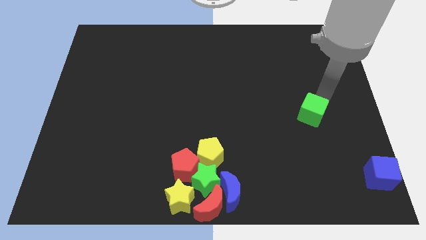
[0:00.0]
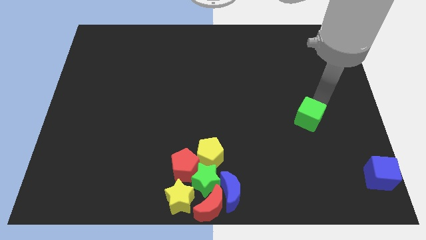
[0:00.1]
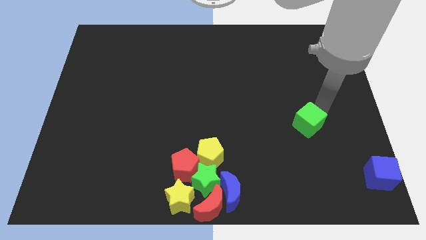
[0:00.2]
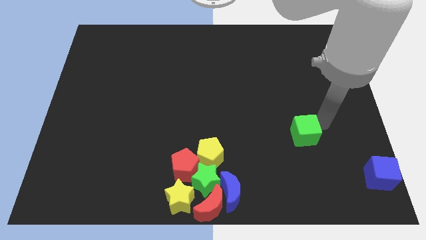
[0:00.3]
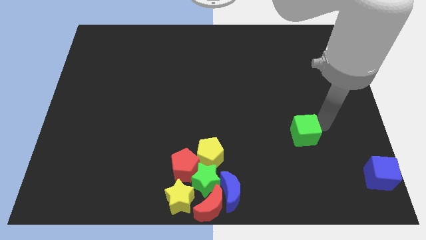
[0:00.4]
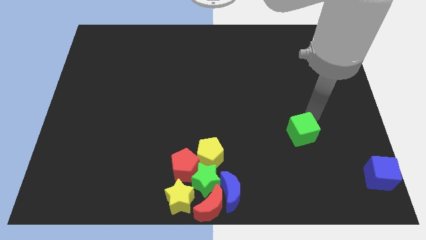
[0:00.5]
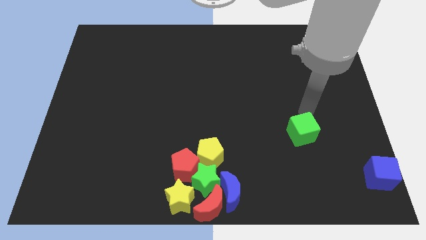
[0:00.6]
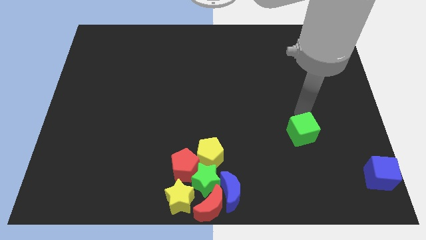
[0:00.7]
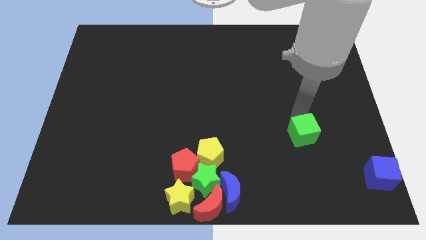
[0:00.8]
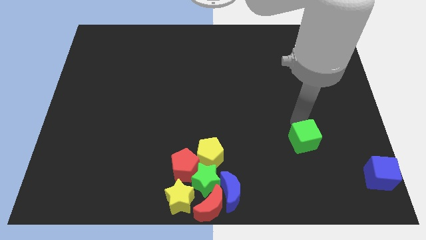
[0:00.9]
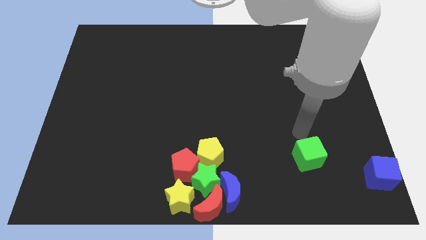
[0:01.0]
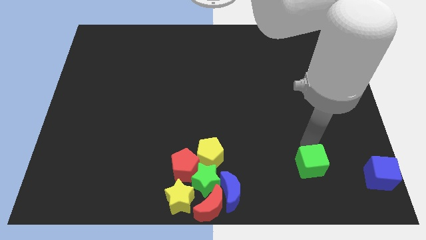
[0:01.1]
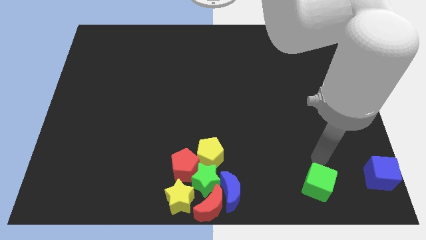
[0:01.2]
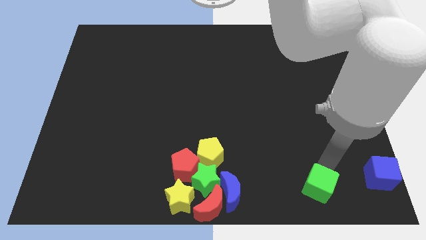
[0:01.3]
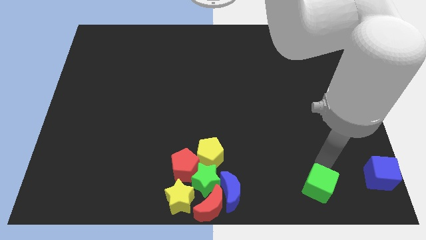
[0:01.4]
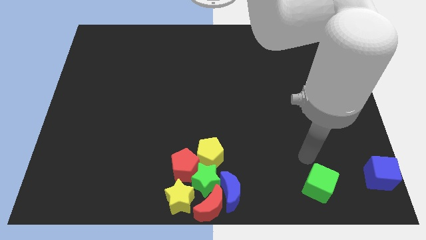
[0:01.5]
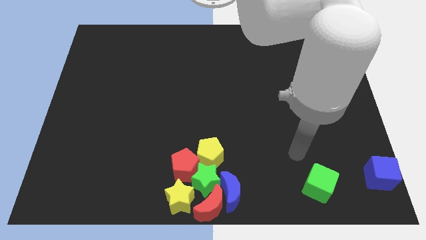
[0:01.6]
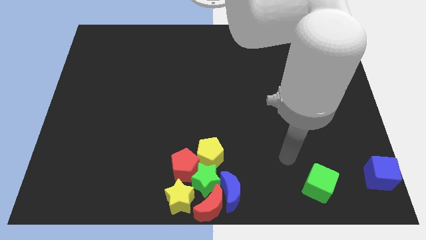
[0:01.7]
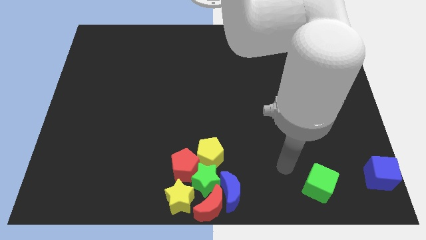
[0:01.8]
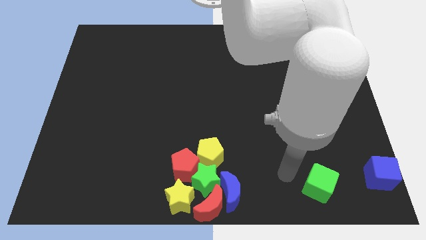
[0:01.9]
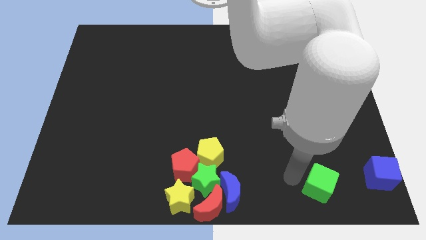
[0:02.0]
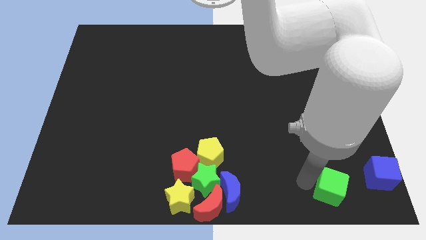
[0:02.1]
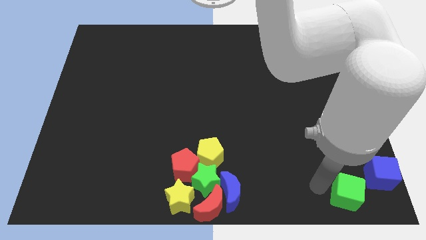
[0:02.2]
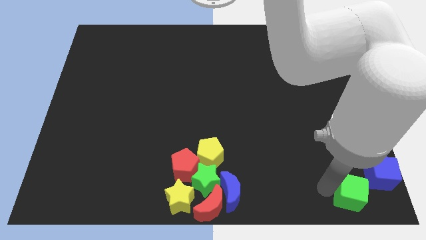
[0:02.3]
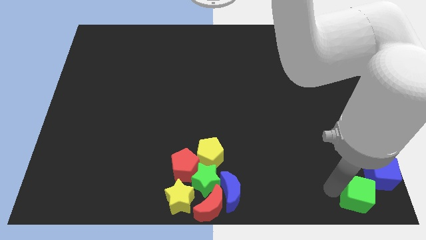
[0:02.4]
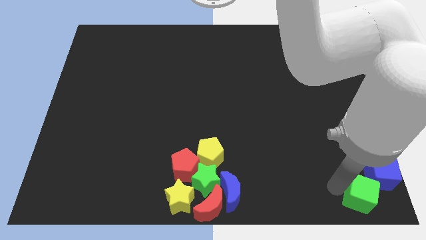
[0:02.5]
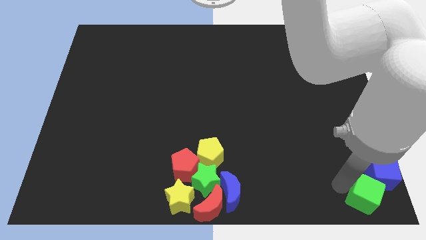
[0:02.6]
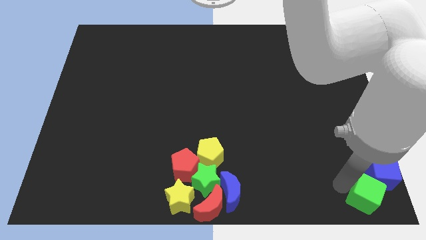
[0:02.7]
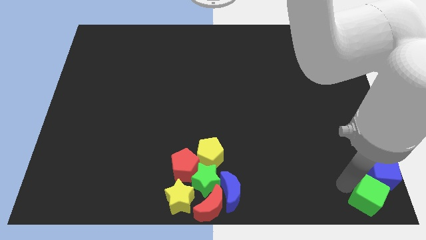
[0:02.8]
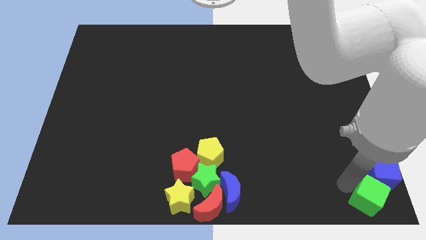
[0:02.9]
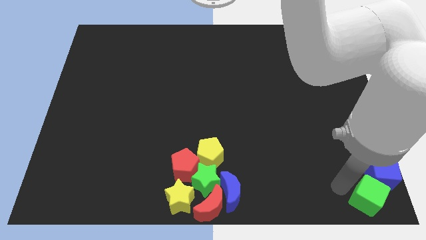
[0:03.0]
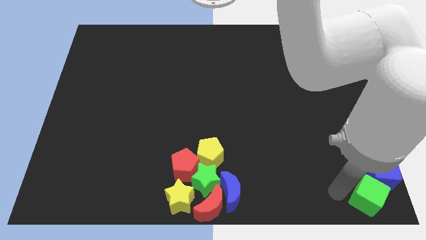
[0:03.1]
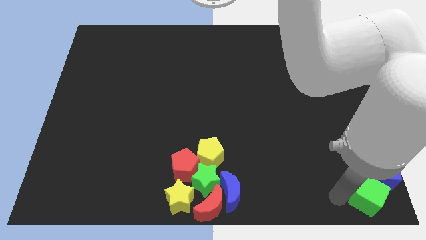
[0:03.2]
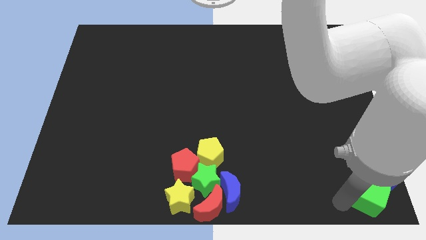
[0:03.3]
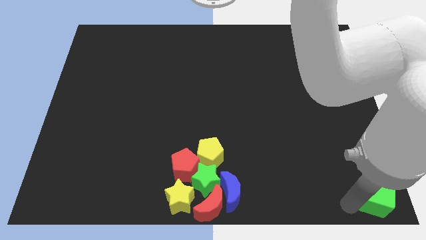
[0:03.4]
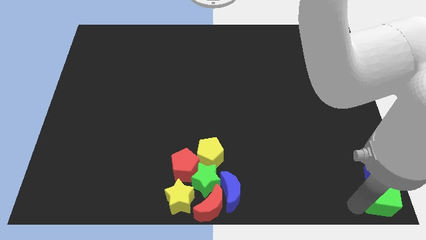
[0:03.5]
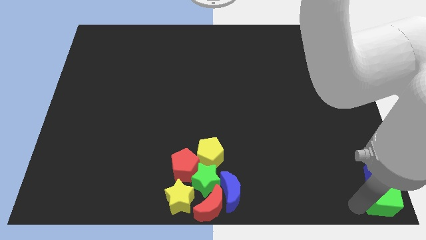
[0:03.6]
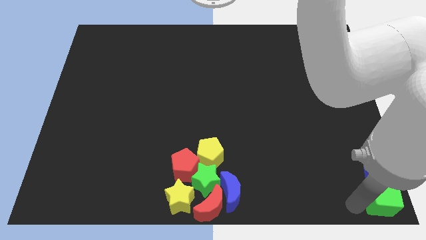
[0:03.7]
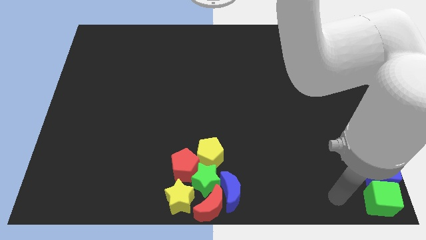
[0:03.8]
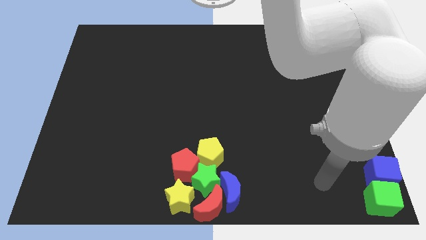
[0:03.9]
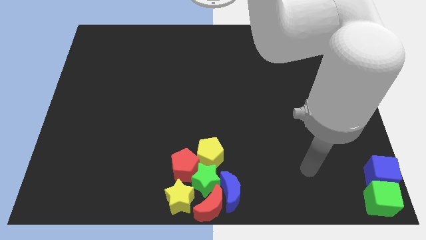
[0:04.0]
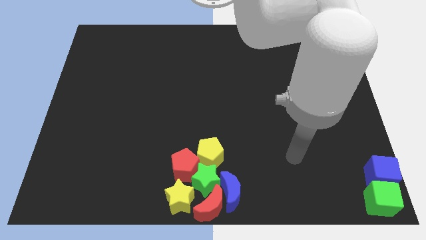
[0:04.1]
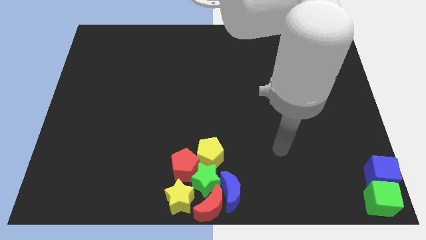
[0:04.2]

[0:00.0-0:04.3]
put the green cube vertically below the blue cube

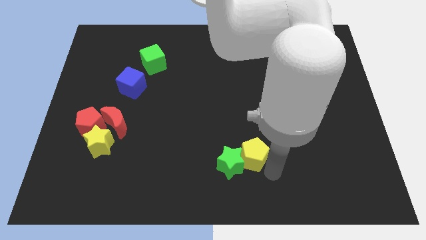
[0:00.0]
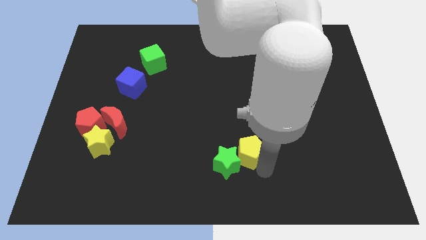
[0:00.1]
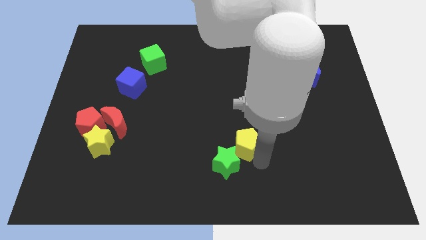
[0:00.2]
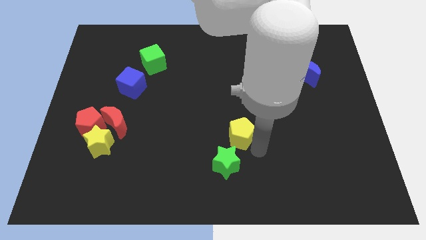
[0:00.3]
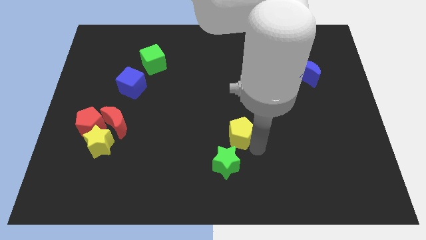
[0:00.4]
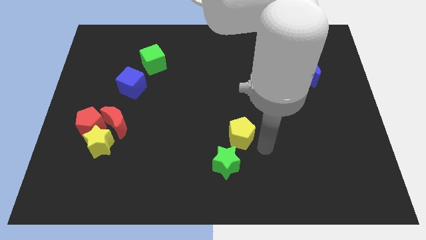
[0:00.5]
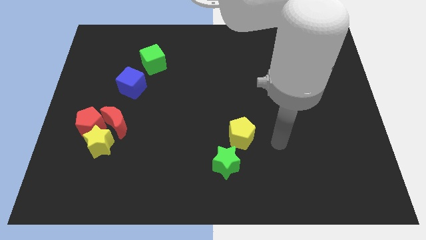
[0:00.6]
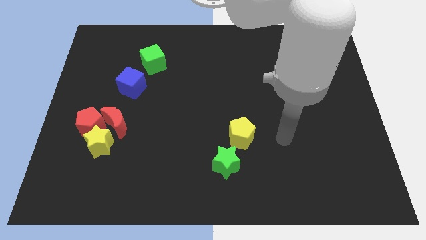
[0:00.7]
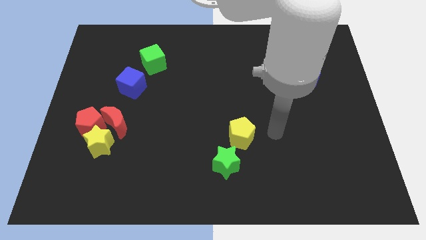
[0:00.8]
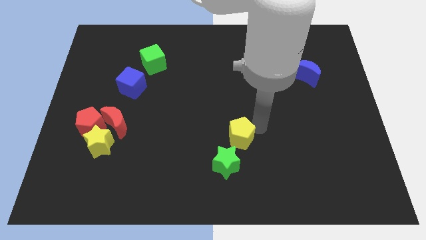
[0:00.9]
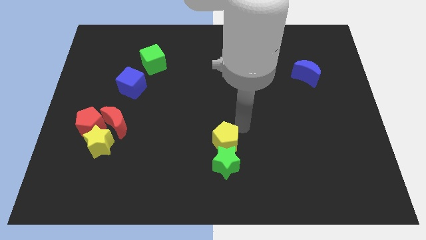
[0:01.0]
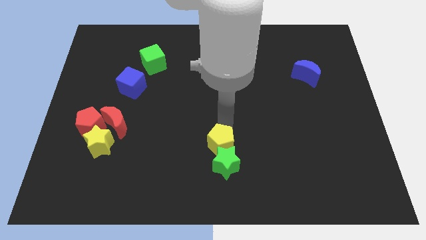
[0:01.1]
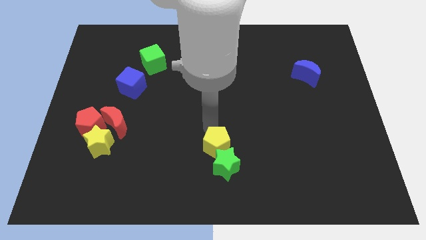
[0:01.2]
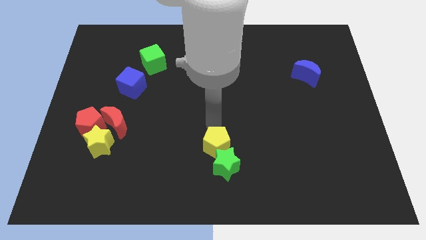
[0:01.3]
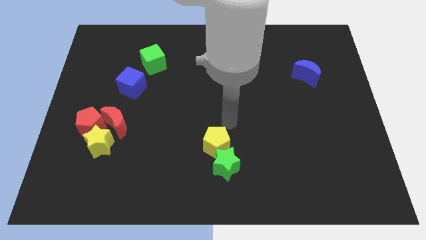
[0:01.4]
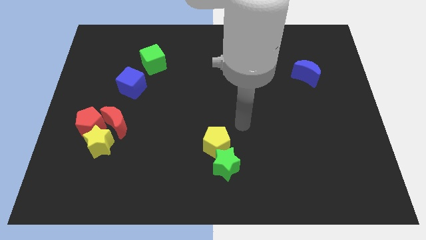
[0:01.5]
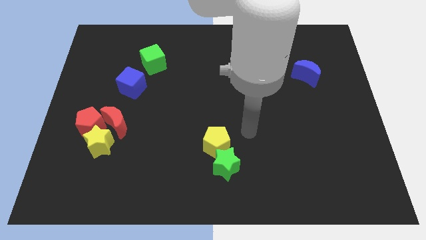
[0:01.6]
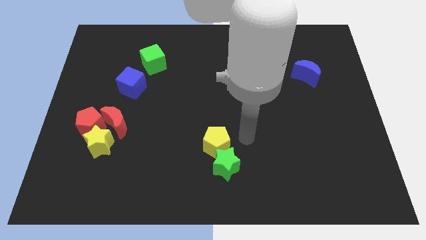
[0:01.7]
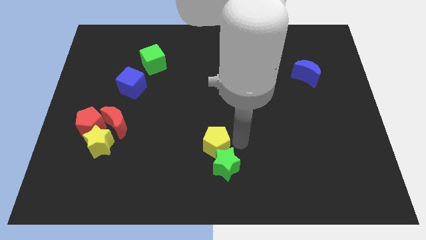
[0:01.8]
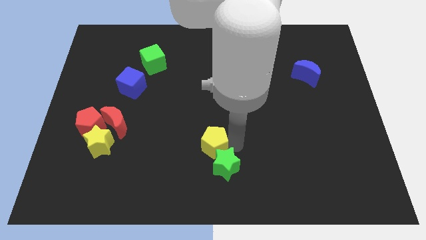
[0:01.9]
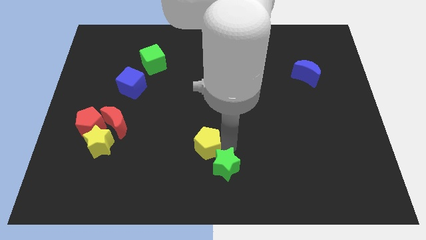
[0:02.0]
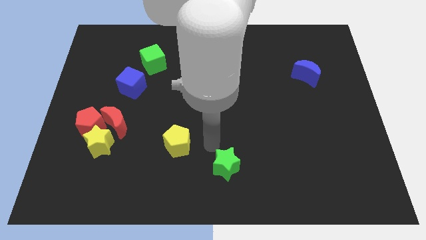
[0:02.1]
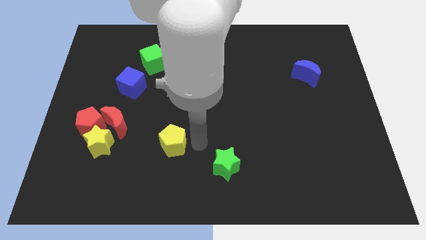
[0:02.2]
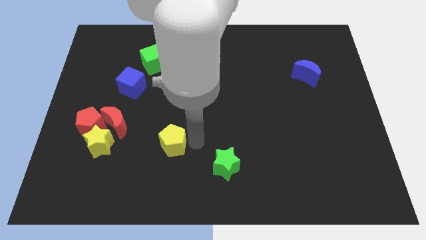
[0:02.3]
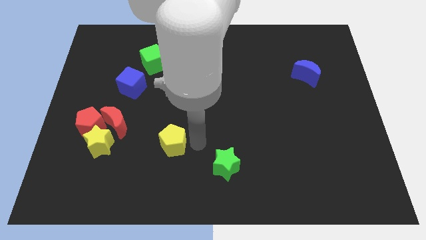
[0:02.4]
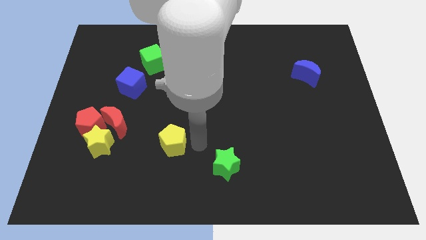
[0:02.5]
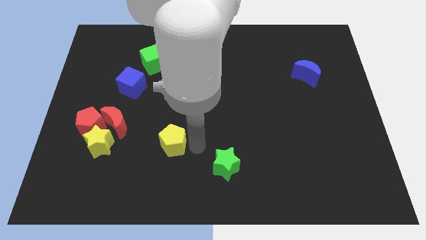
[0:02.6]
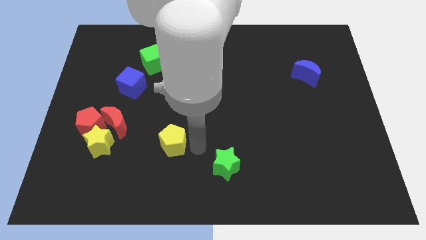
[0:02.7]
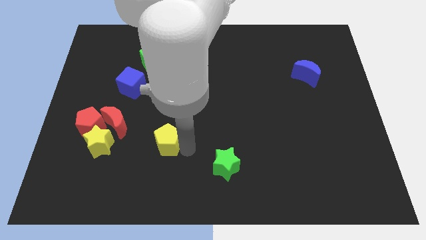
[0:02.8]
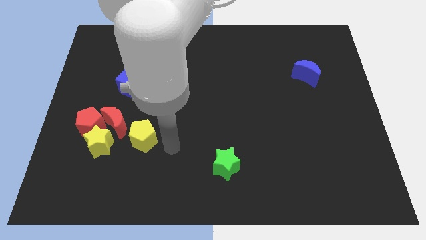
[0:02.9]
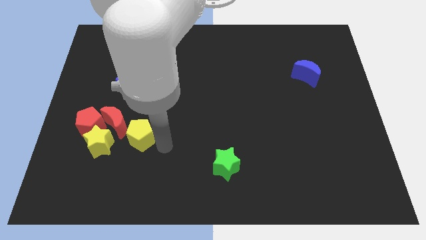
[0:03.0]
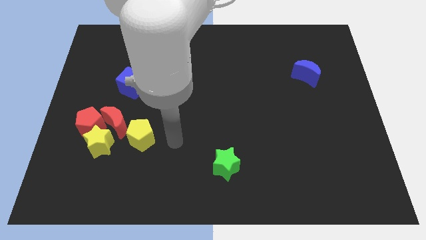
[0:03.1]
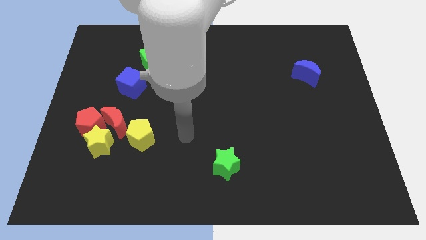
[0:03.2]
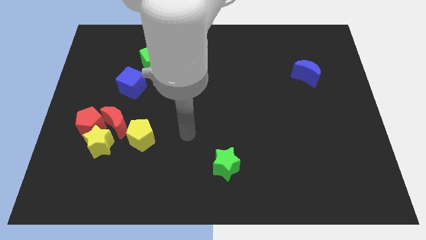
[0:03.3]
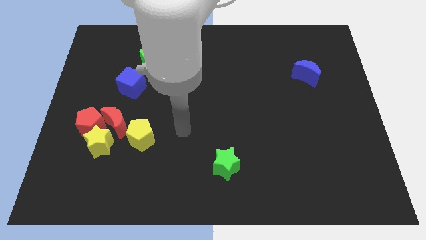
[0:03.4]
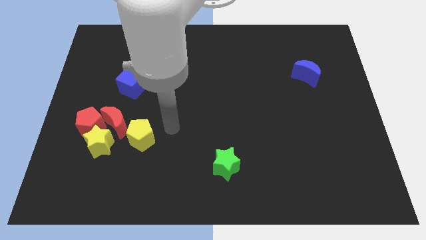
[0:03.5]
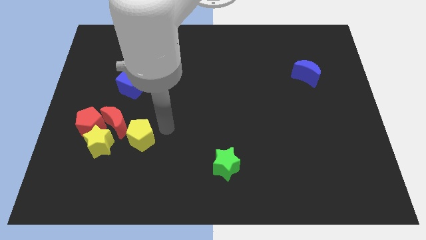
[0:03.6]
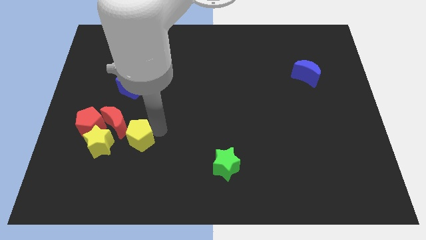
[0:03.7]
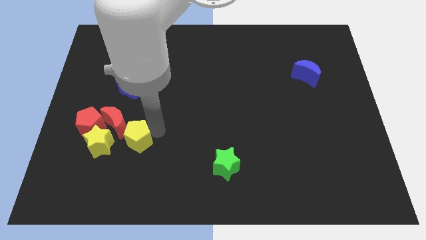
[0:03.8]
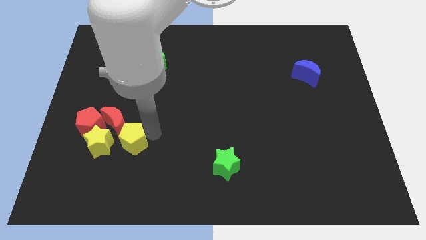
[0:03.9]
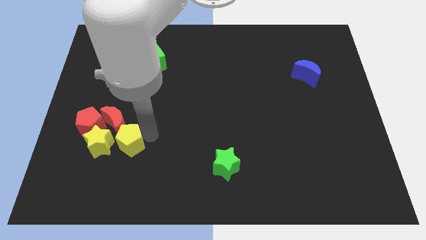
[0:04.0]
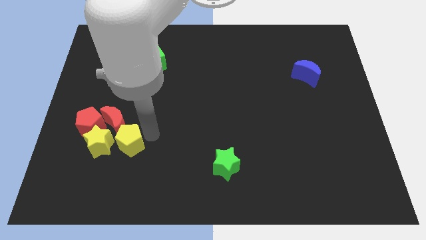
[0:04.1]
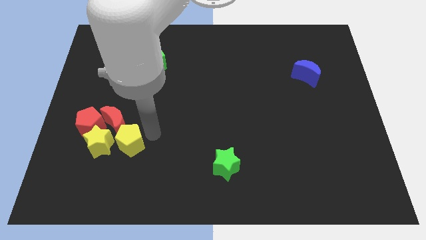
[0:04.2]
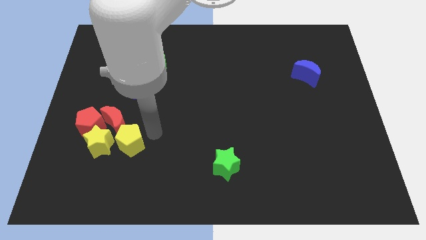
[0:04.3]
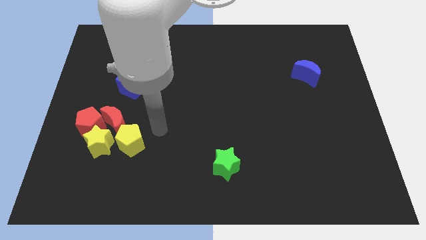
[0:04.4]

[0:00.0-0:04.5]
push the yellow pentagon towards the right side of the yellow star

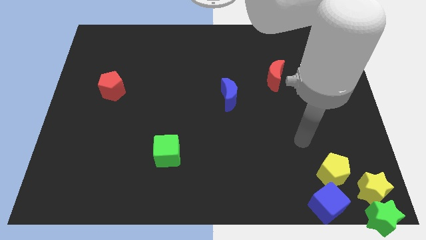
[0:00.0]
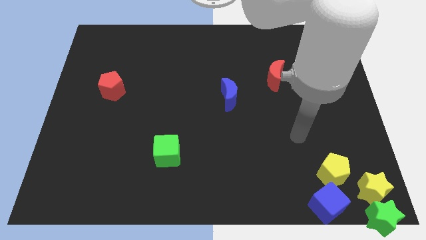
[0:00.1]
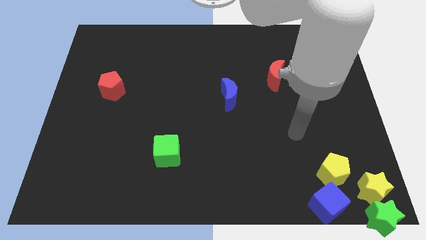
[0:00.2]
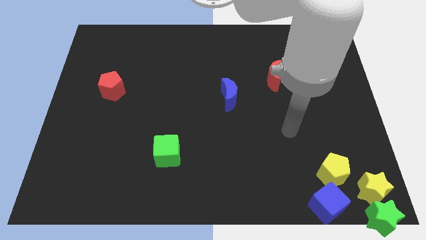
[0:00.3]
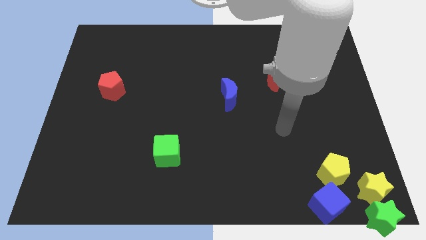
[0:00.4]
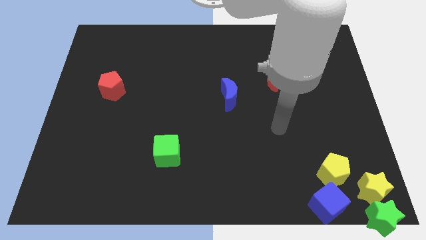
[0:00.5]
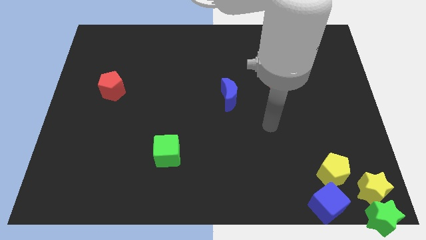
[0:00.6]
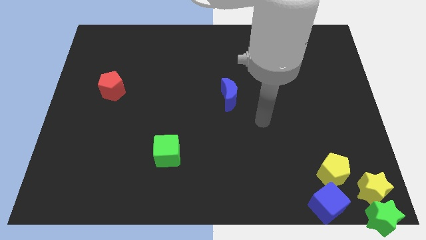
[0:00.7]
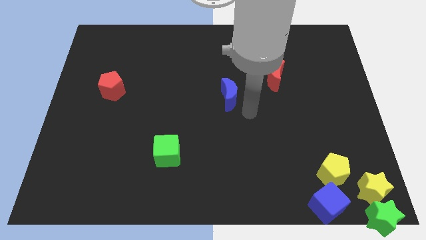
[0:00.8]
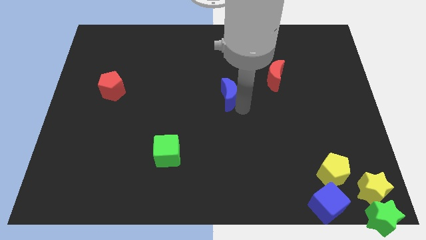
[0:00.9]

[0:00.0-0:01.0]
move your arm near blue moon
